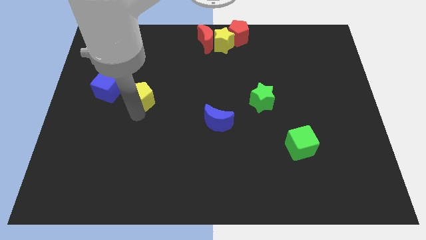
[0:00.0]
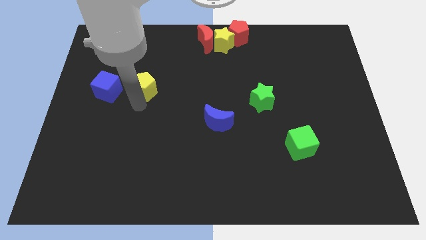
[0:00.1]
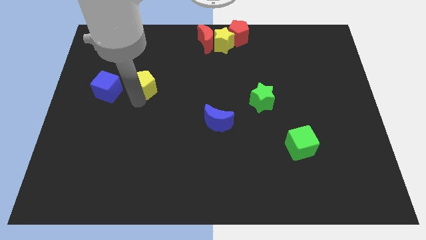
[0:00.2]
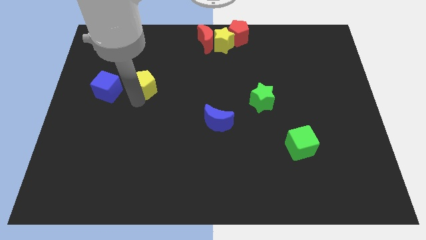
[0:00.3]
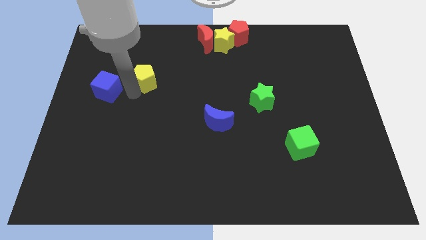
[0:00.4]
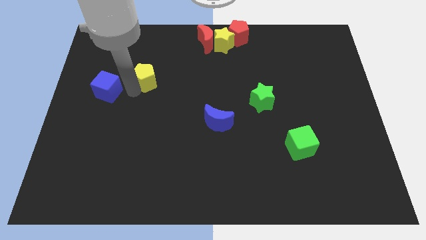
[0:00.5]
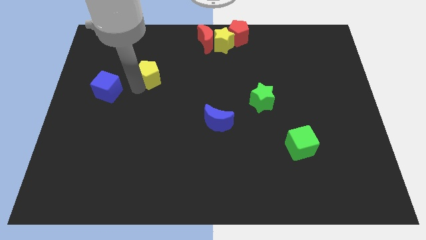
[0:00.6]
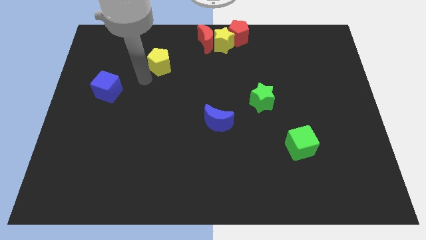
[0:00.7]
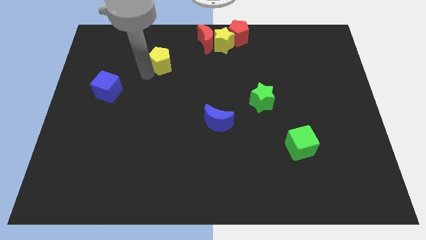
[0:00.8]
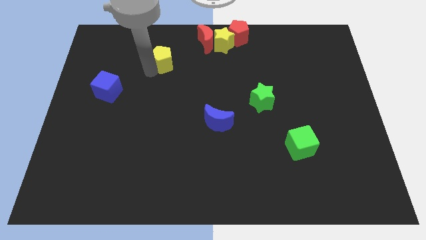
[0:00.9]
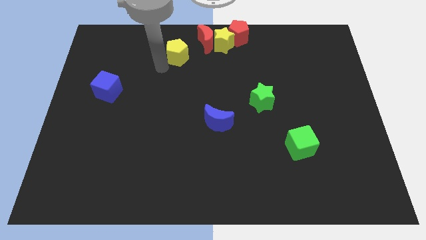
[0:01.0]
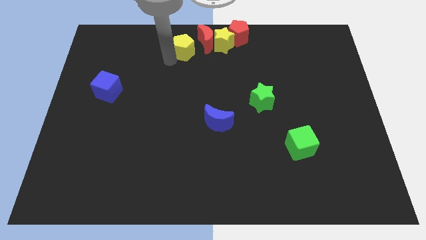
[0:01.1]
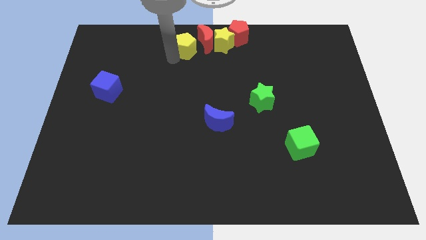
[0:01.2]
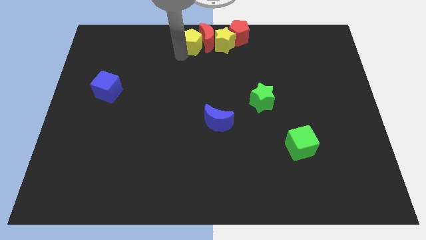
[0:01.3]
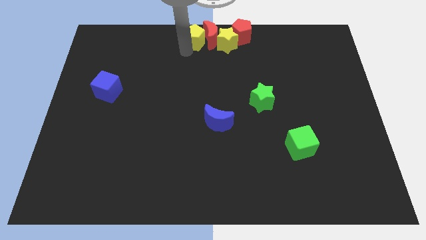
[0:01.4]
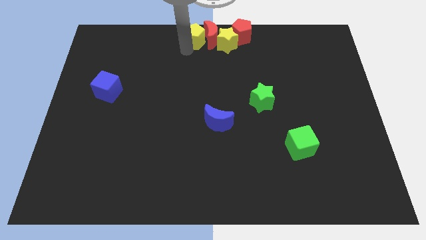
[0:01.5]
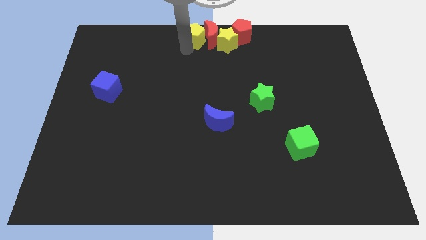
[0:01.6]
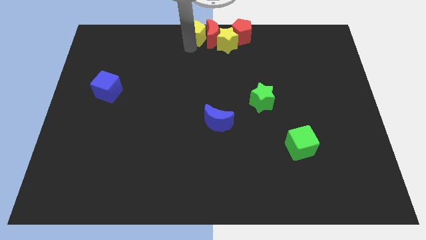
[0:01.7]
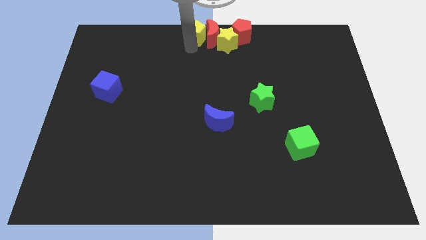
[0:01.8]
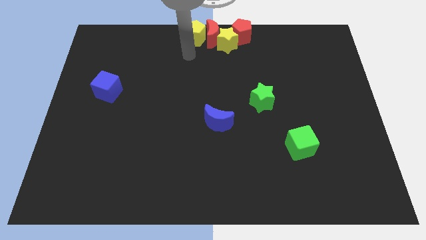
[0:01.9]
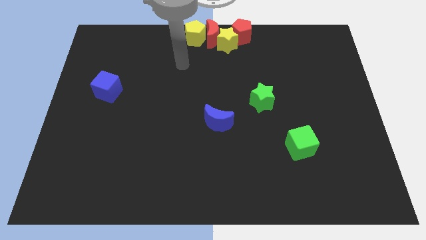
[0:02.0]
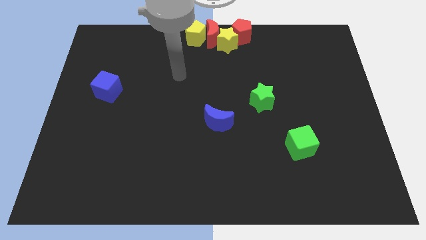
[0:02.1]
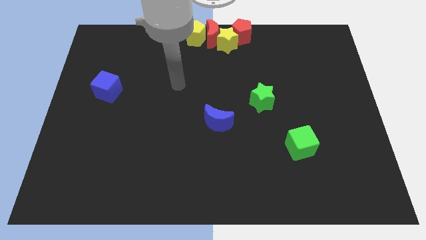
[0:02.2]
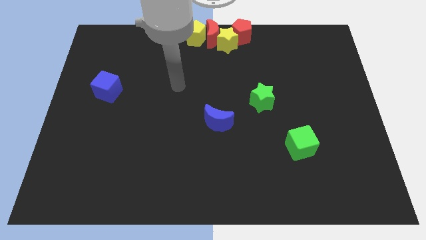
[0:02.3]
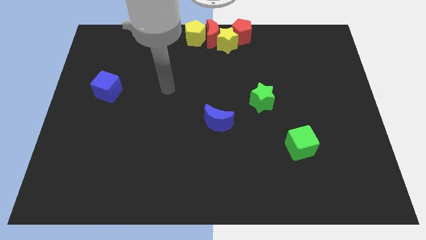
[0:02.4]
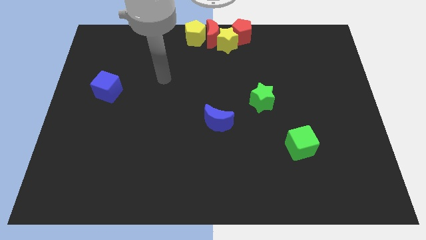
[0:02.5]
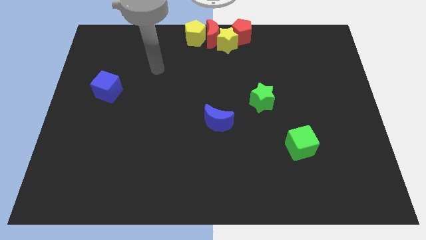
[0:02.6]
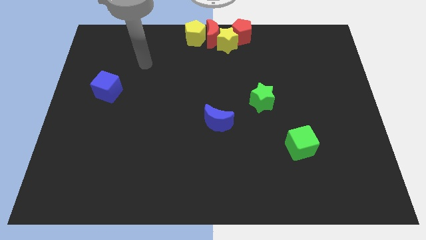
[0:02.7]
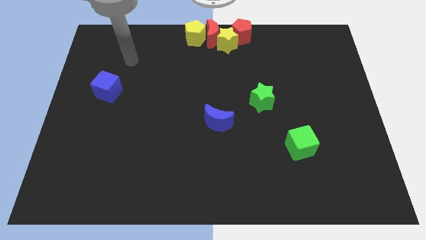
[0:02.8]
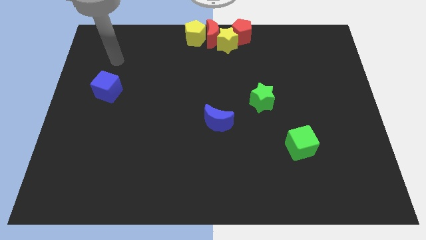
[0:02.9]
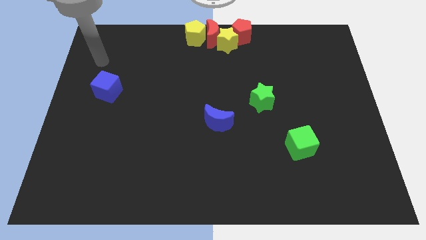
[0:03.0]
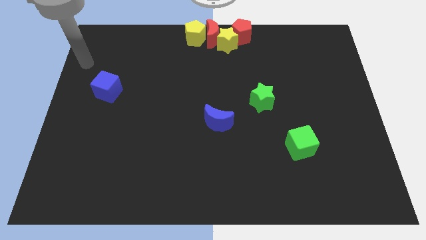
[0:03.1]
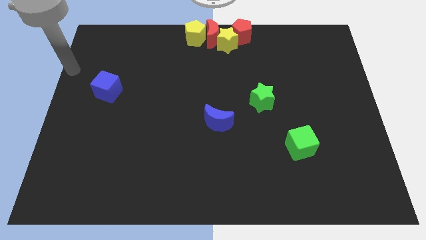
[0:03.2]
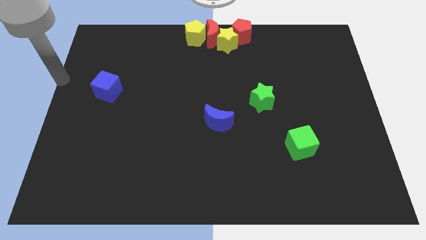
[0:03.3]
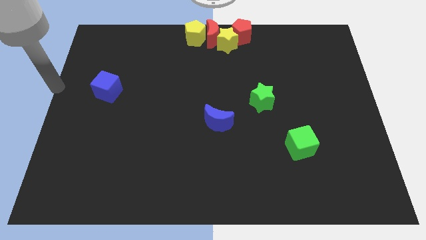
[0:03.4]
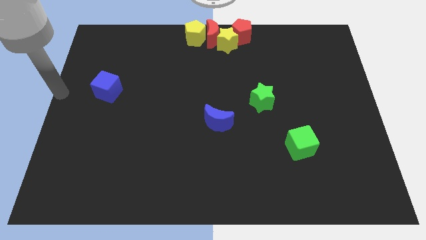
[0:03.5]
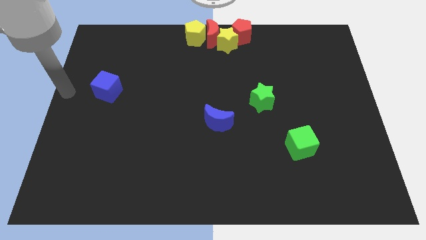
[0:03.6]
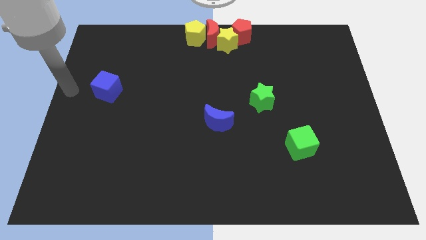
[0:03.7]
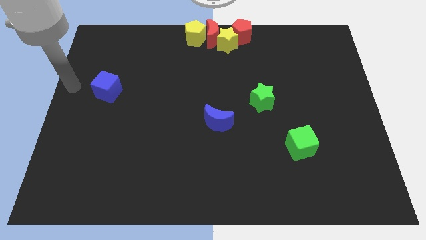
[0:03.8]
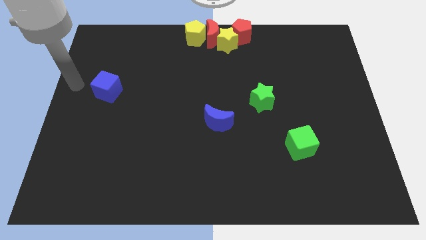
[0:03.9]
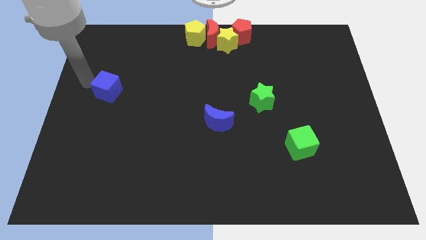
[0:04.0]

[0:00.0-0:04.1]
push yellow pentagon to the left of red moon

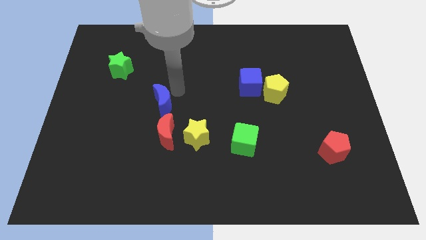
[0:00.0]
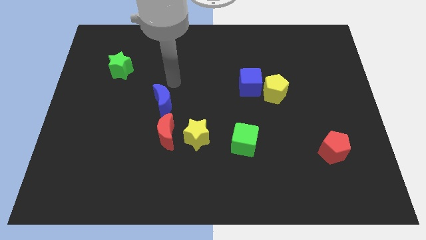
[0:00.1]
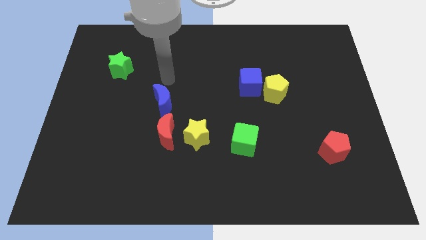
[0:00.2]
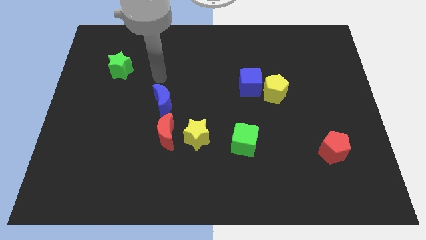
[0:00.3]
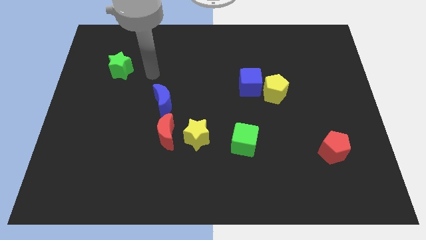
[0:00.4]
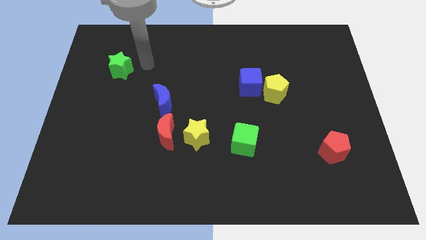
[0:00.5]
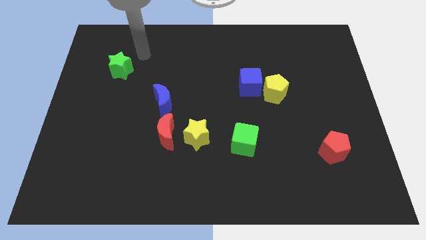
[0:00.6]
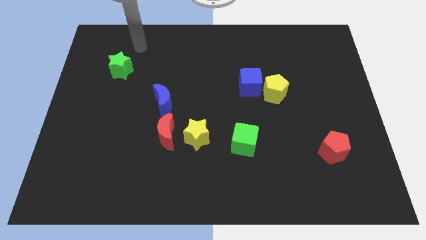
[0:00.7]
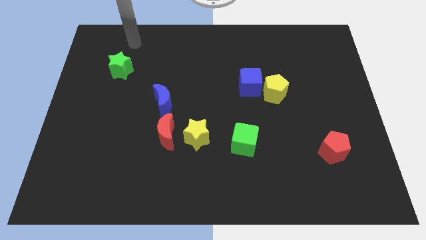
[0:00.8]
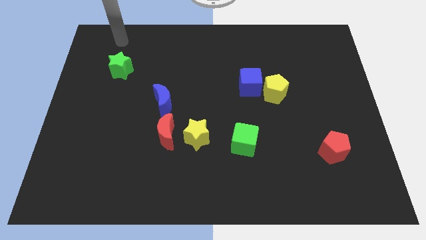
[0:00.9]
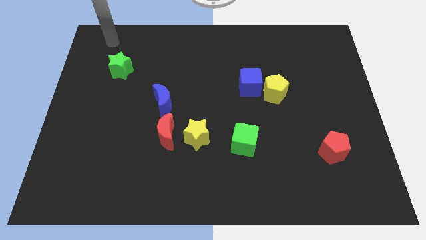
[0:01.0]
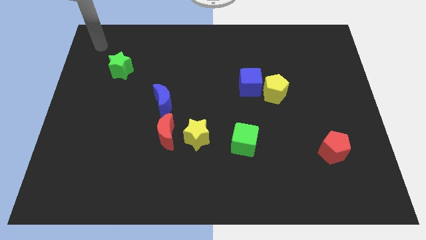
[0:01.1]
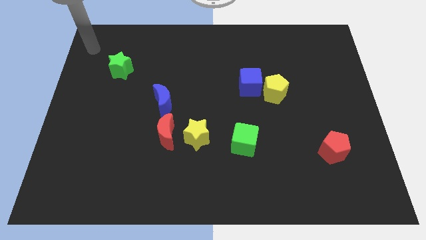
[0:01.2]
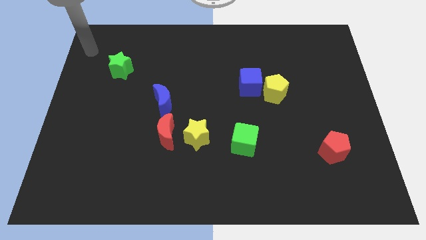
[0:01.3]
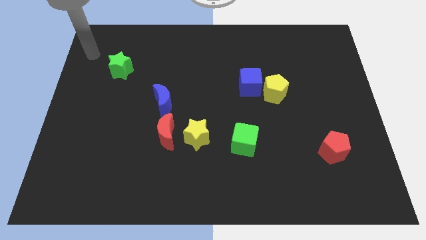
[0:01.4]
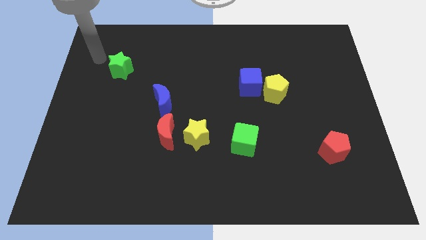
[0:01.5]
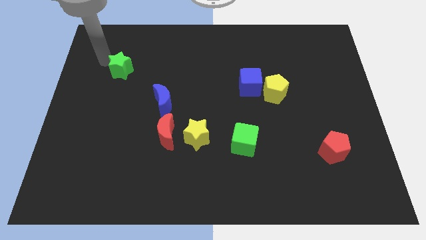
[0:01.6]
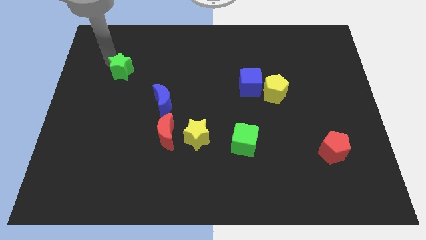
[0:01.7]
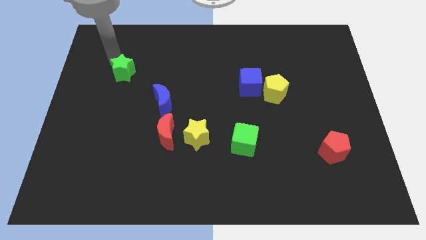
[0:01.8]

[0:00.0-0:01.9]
move your arm towards the green star

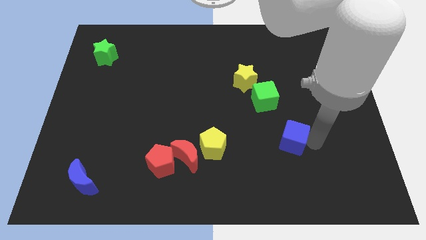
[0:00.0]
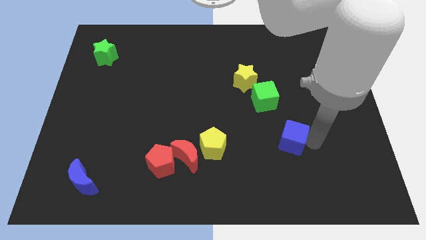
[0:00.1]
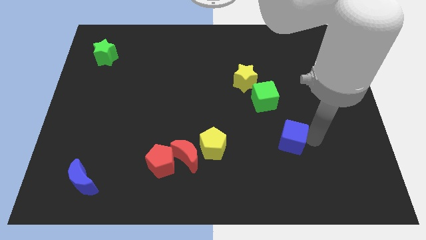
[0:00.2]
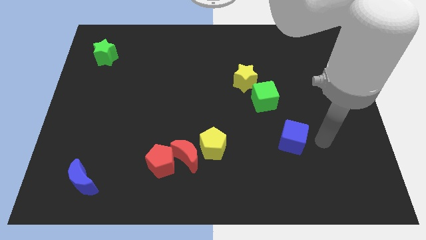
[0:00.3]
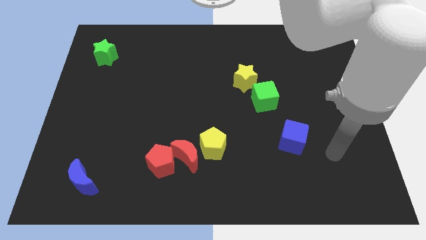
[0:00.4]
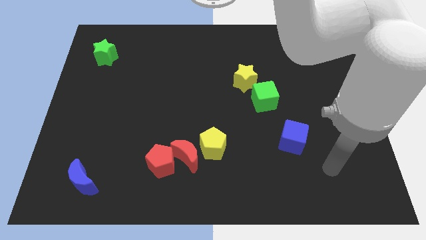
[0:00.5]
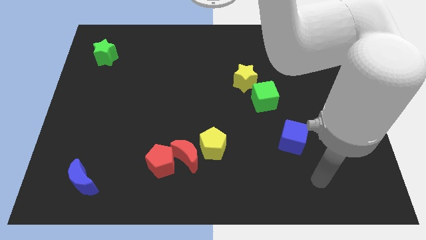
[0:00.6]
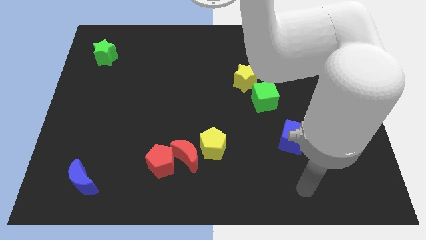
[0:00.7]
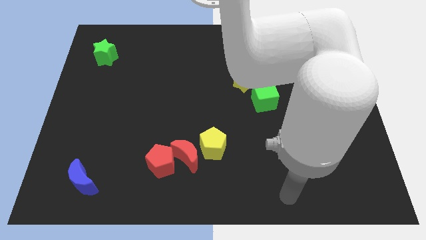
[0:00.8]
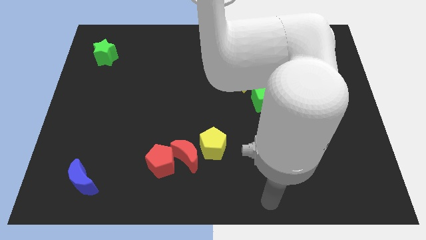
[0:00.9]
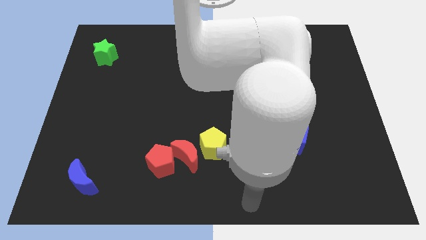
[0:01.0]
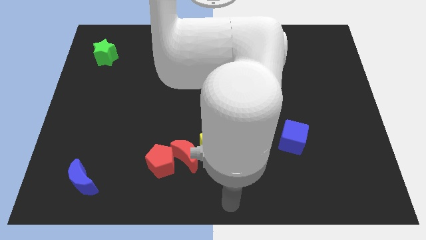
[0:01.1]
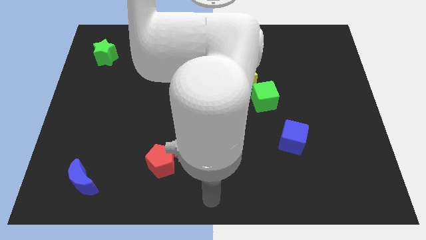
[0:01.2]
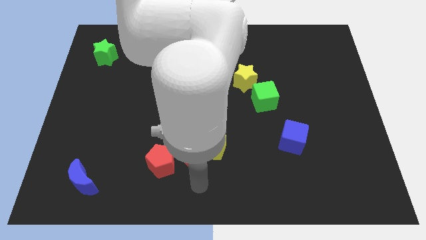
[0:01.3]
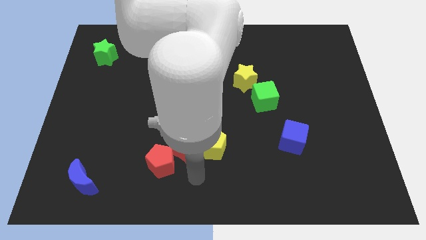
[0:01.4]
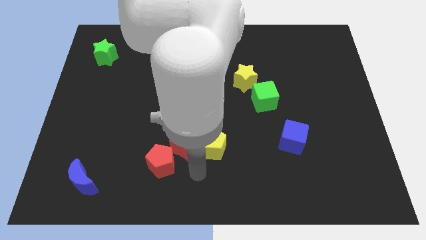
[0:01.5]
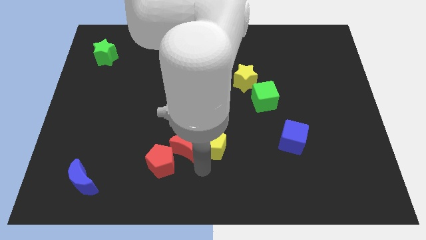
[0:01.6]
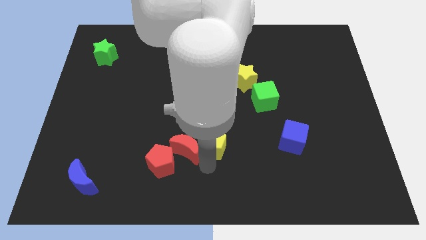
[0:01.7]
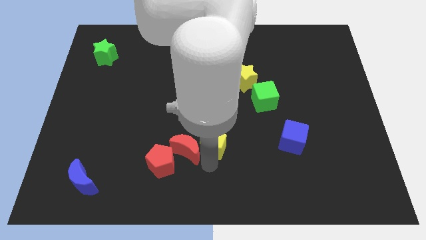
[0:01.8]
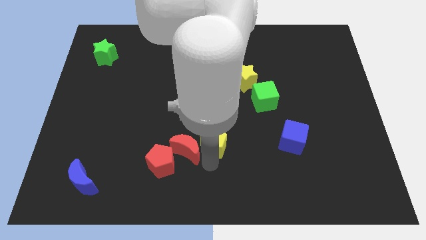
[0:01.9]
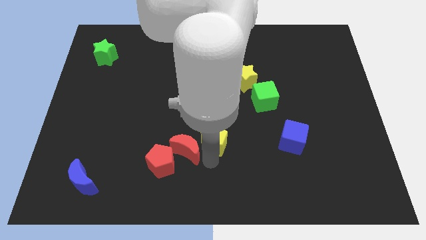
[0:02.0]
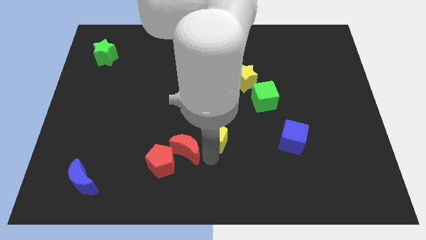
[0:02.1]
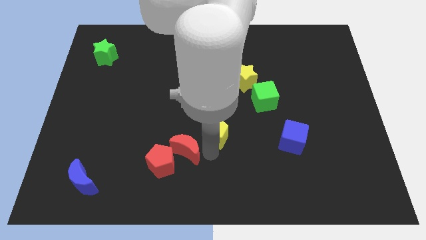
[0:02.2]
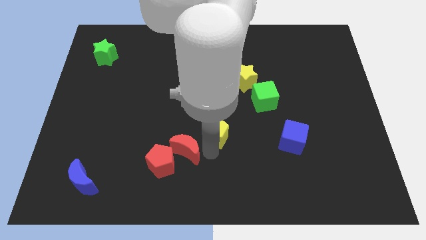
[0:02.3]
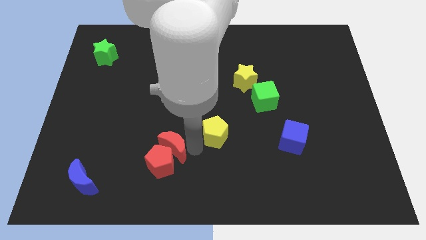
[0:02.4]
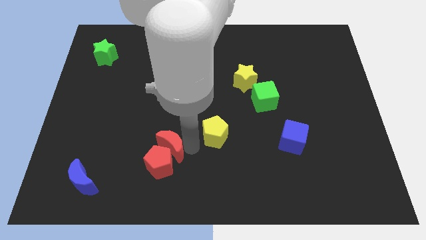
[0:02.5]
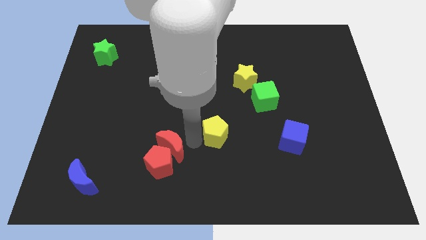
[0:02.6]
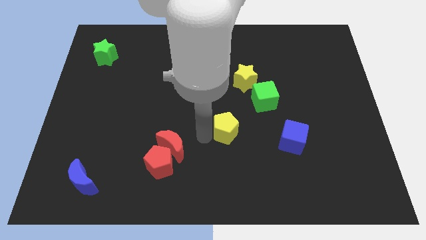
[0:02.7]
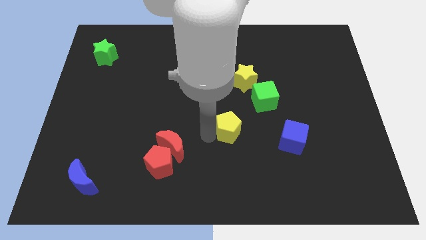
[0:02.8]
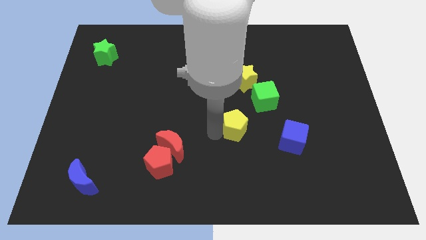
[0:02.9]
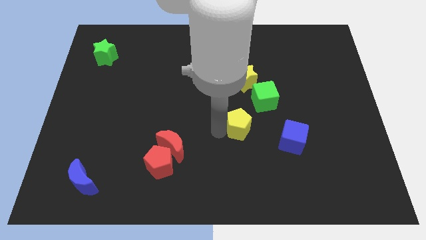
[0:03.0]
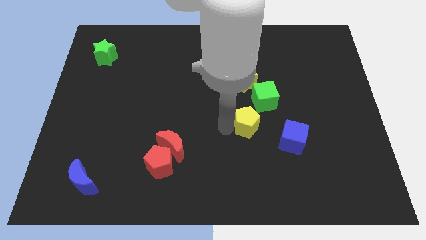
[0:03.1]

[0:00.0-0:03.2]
place the yellow pentagon diagonally top right to red moon
